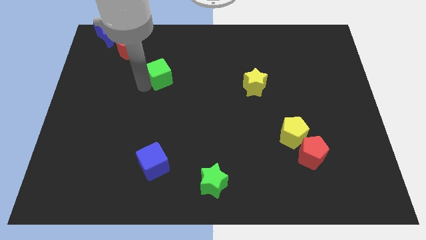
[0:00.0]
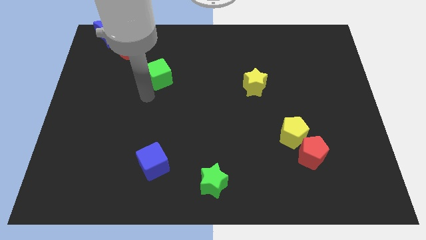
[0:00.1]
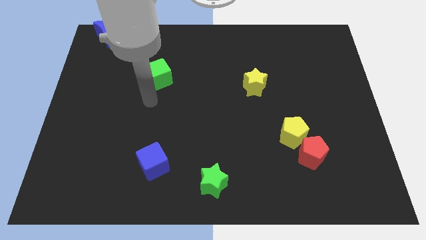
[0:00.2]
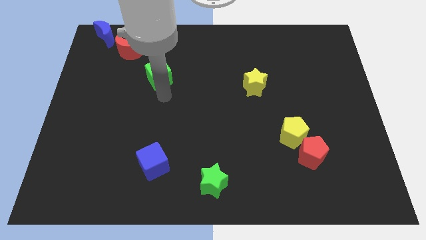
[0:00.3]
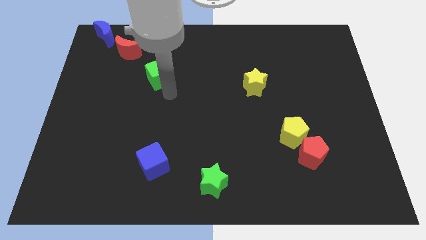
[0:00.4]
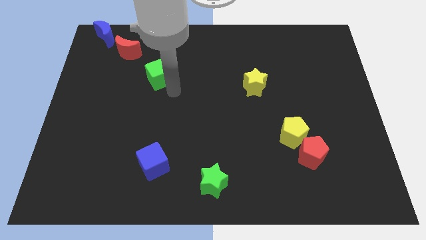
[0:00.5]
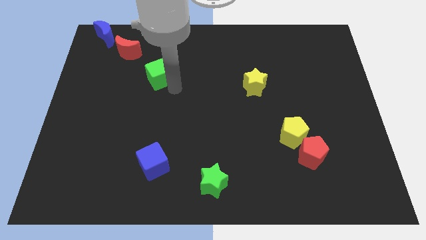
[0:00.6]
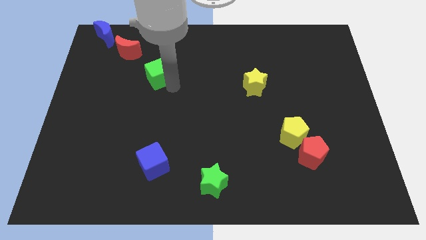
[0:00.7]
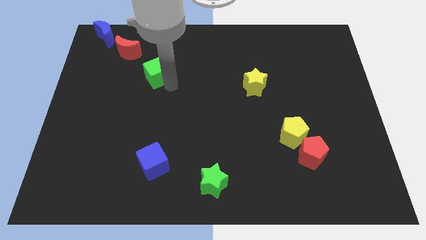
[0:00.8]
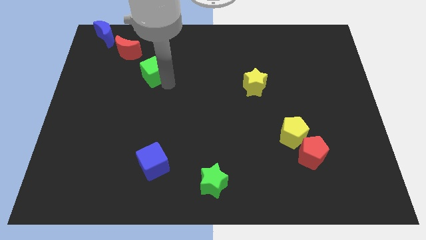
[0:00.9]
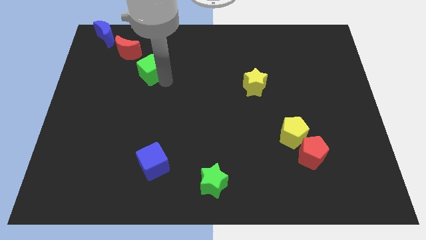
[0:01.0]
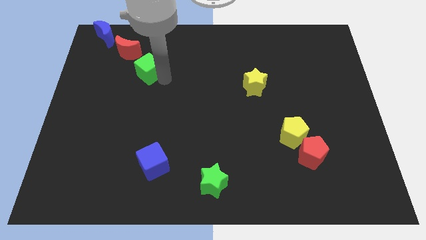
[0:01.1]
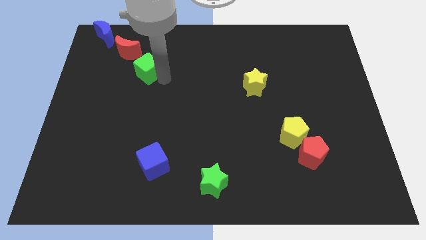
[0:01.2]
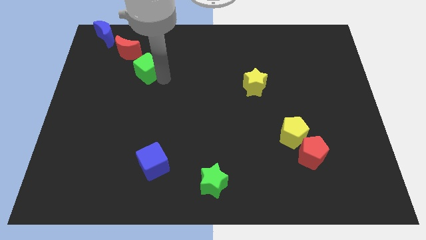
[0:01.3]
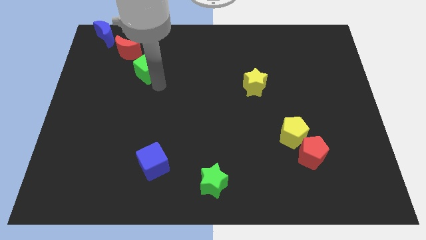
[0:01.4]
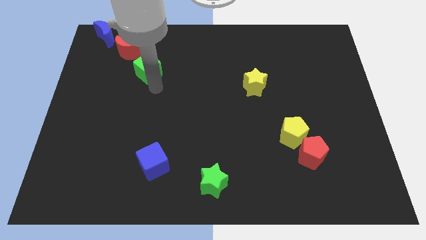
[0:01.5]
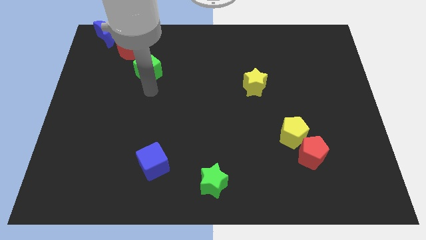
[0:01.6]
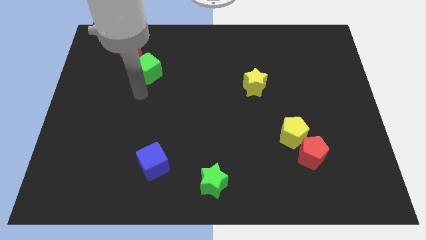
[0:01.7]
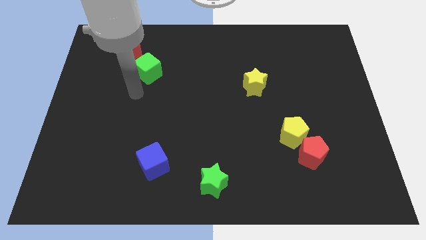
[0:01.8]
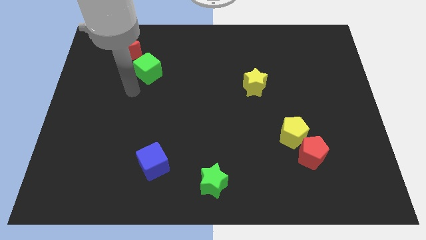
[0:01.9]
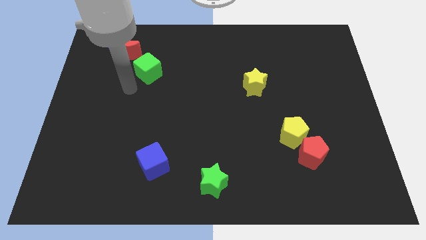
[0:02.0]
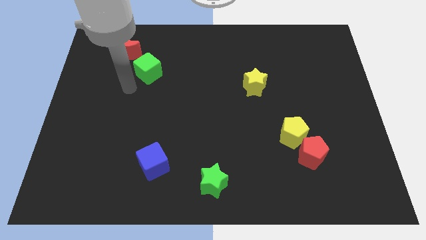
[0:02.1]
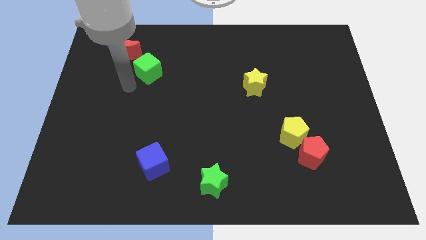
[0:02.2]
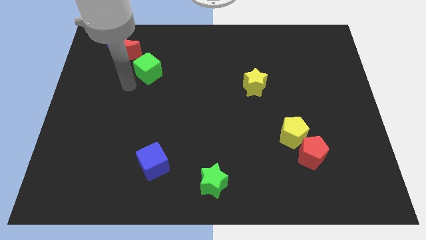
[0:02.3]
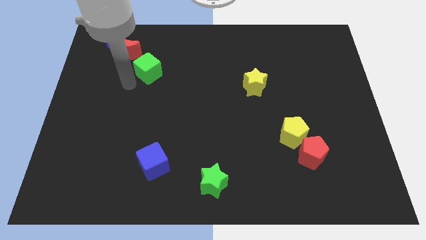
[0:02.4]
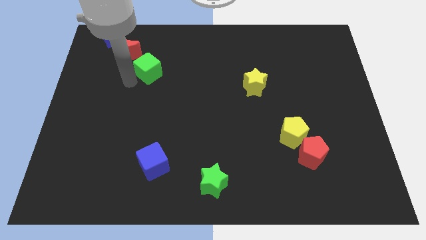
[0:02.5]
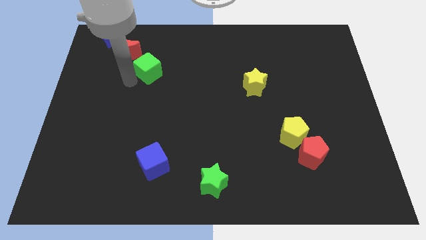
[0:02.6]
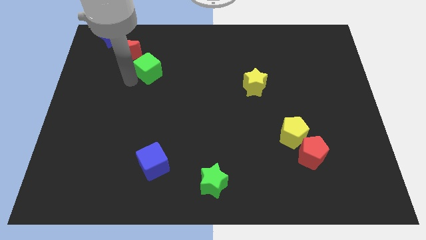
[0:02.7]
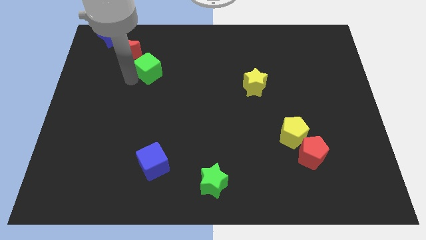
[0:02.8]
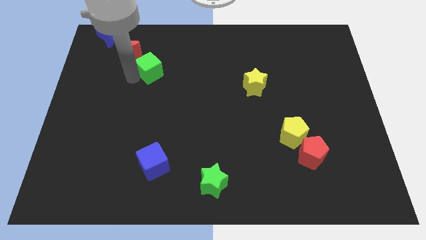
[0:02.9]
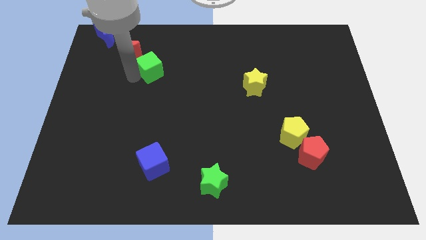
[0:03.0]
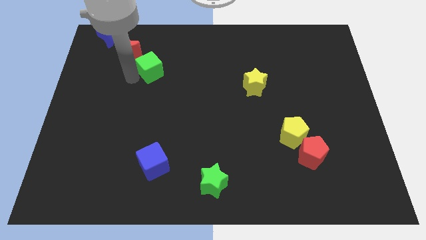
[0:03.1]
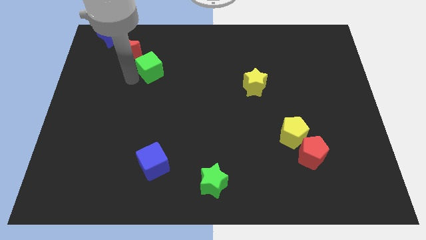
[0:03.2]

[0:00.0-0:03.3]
place green cube at bottom right to red moon

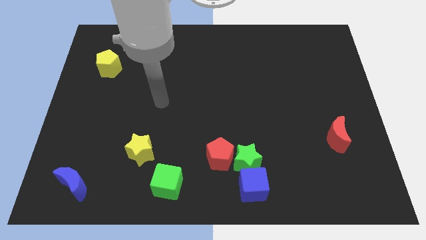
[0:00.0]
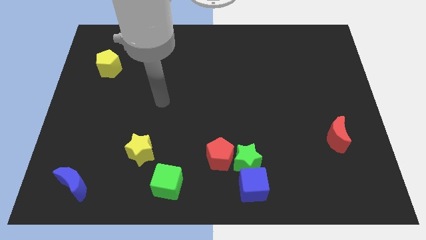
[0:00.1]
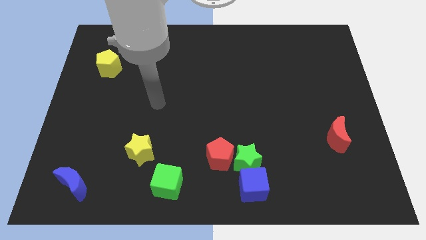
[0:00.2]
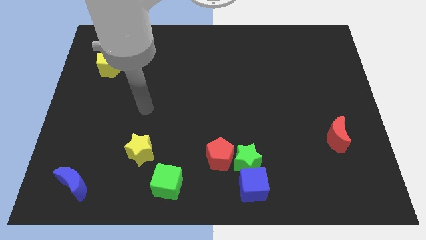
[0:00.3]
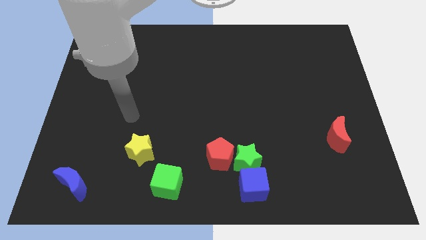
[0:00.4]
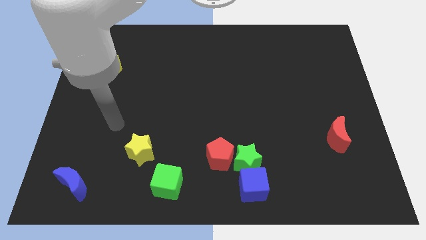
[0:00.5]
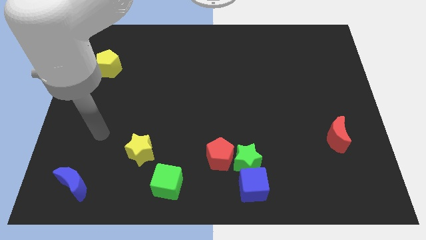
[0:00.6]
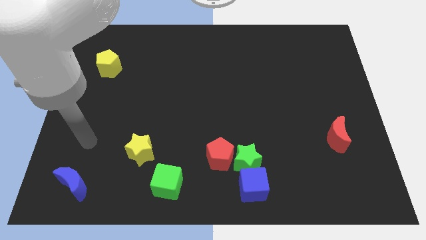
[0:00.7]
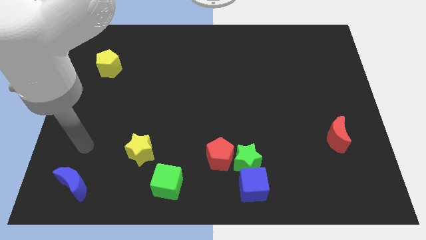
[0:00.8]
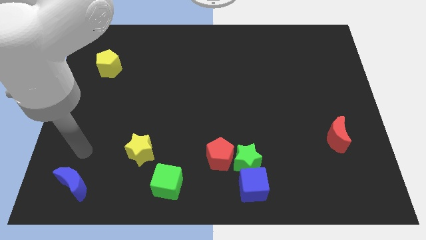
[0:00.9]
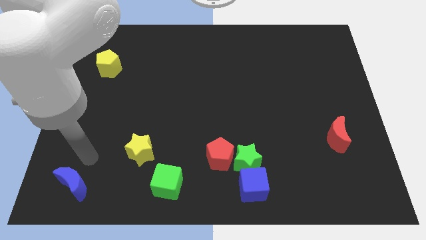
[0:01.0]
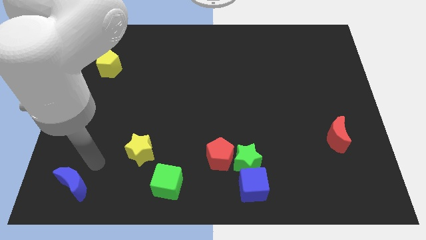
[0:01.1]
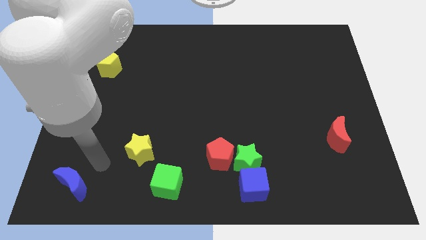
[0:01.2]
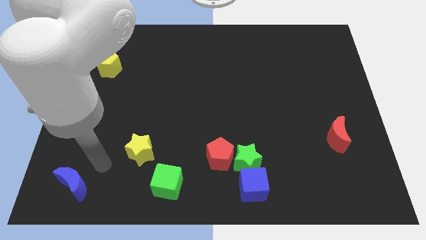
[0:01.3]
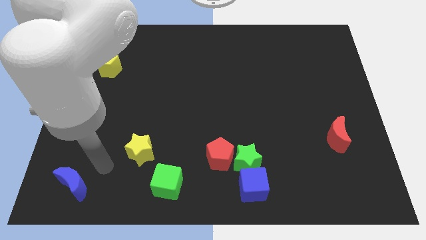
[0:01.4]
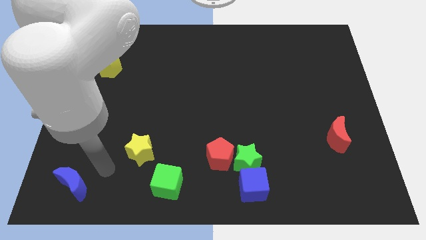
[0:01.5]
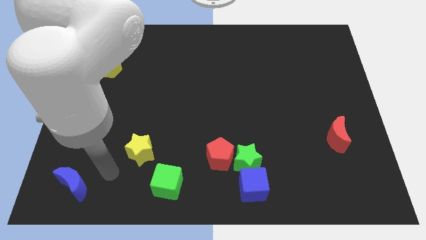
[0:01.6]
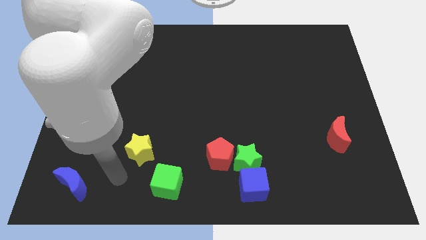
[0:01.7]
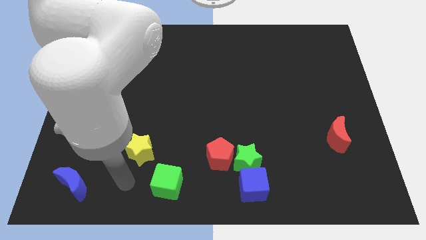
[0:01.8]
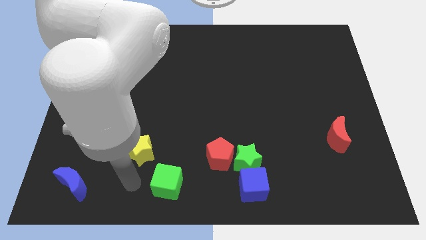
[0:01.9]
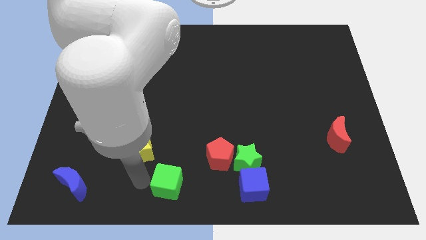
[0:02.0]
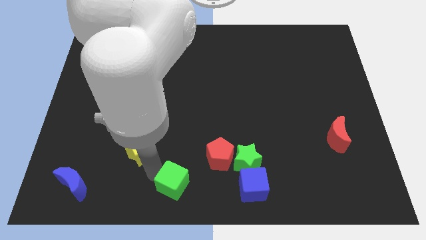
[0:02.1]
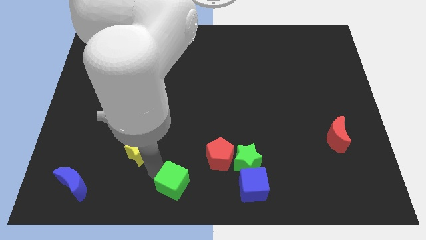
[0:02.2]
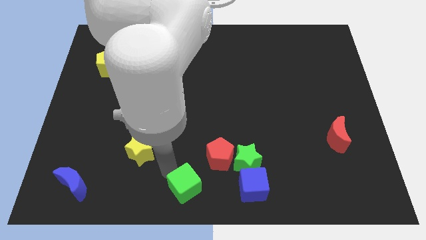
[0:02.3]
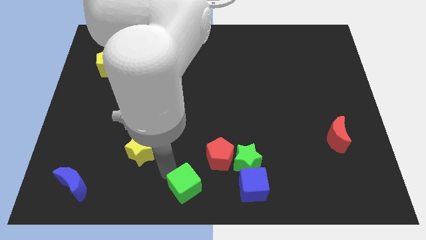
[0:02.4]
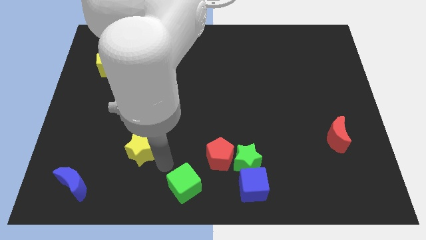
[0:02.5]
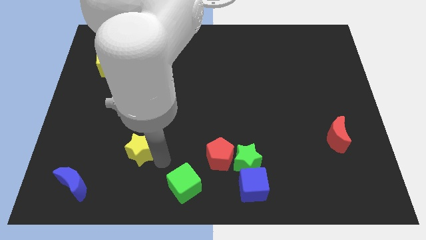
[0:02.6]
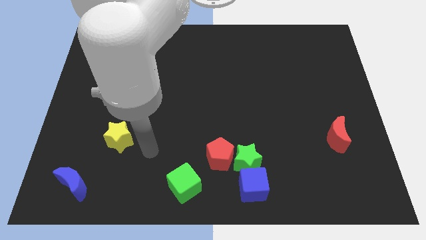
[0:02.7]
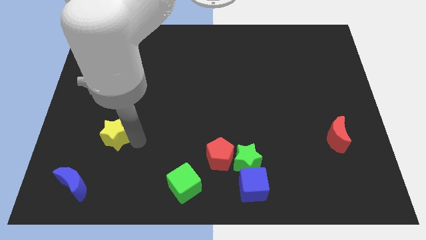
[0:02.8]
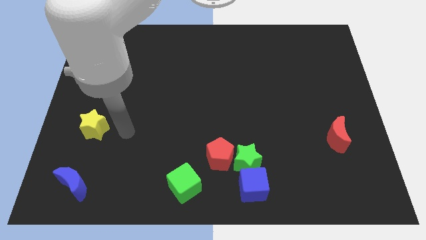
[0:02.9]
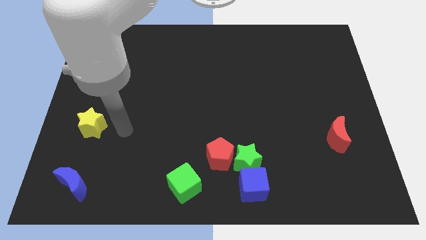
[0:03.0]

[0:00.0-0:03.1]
separate green cube and yellow star

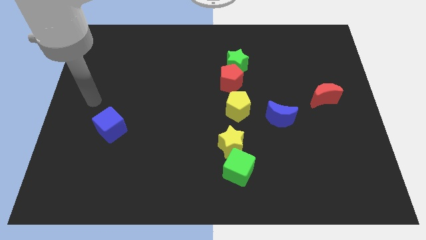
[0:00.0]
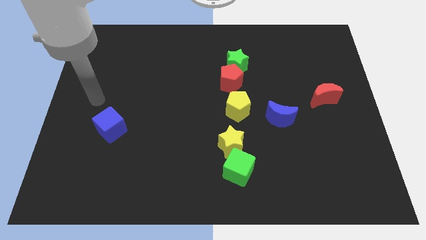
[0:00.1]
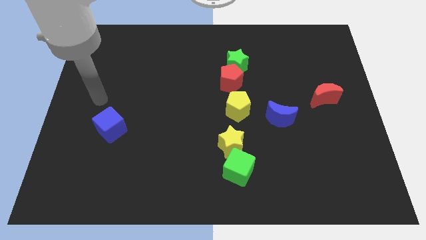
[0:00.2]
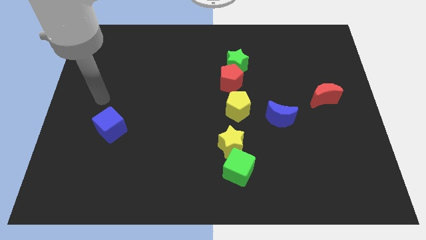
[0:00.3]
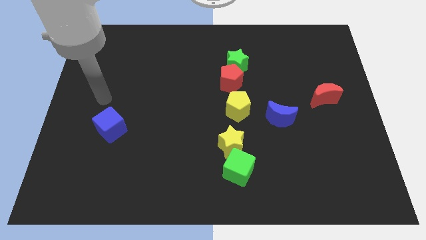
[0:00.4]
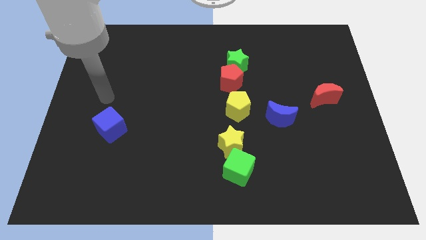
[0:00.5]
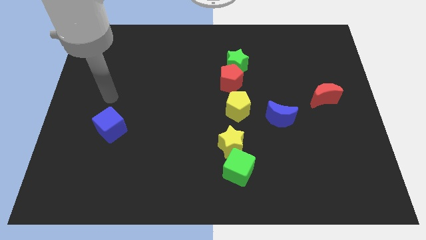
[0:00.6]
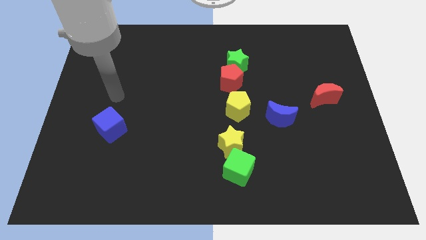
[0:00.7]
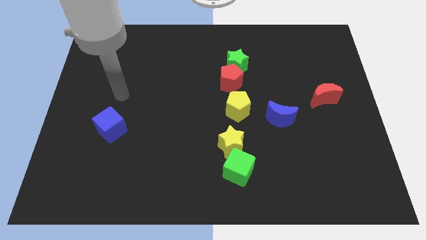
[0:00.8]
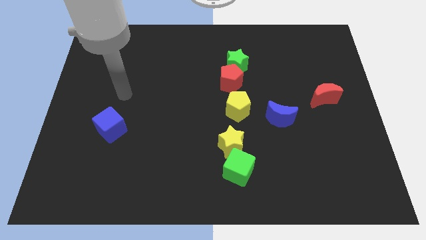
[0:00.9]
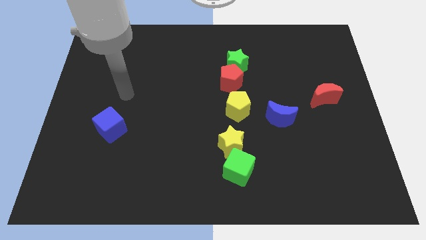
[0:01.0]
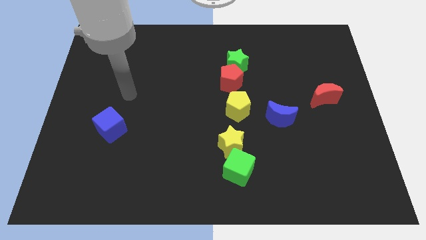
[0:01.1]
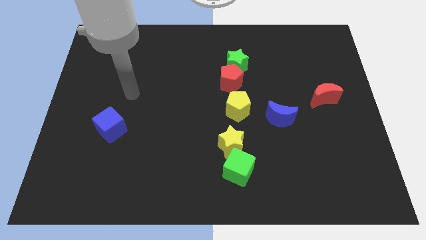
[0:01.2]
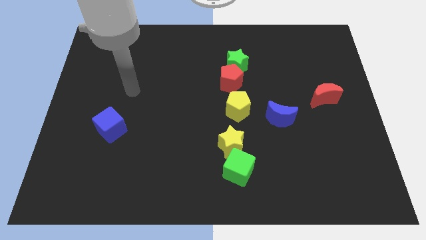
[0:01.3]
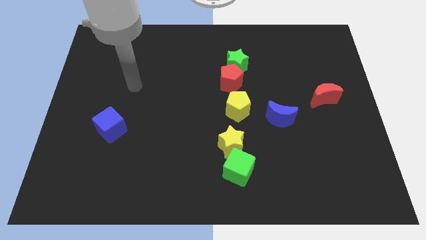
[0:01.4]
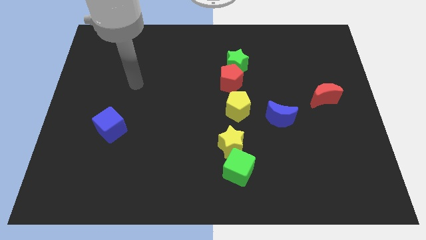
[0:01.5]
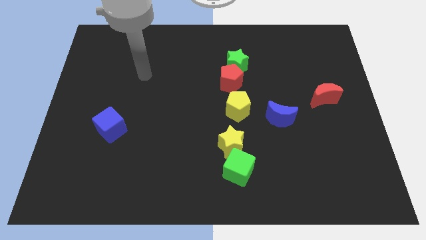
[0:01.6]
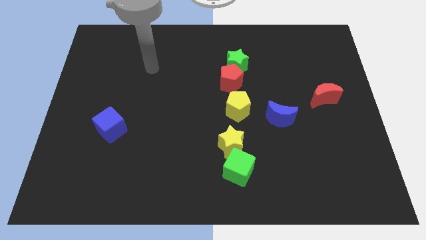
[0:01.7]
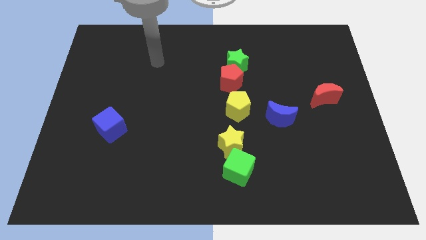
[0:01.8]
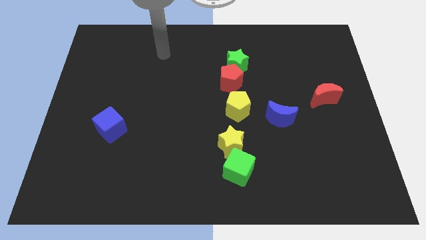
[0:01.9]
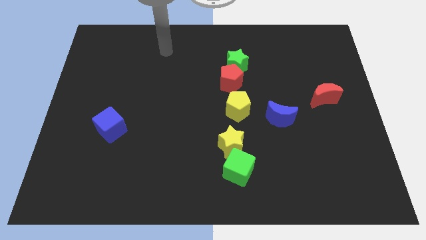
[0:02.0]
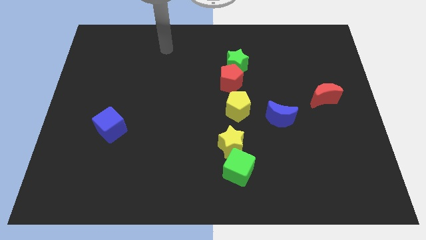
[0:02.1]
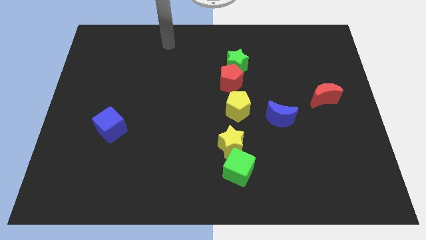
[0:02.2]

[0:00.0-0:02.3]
move your hand towards the top side

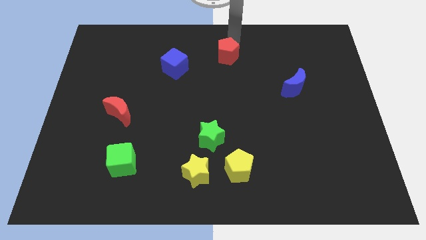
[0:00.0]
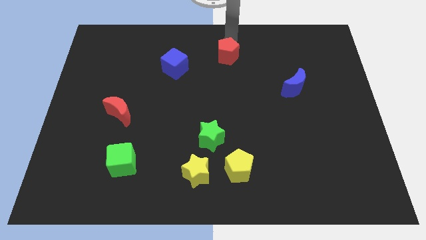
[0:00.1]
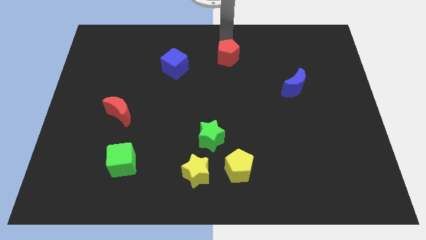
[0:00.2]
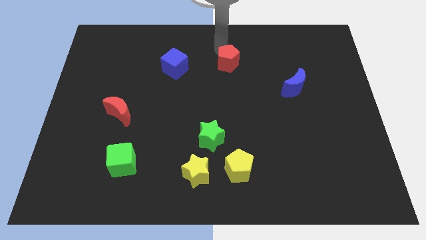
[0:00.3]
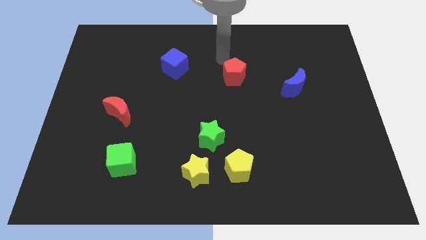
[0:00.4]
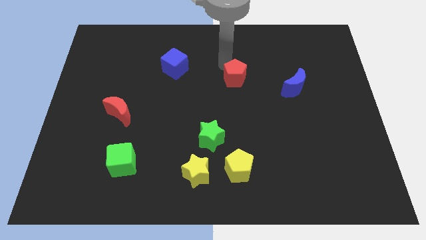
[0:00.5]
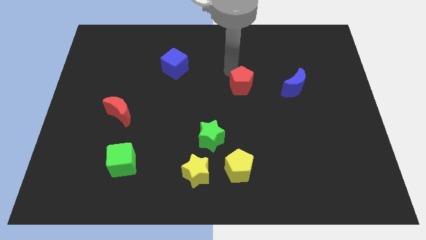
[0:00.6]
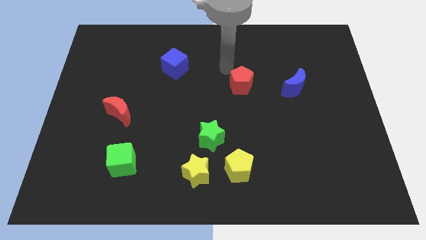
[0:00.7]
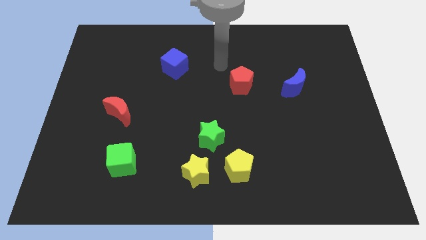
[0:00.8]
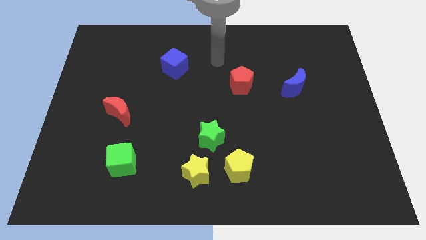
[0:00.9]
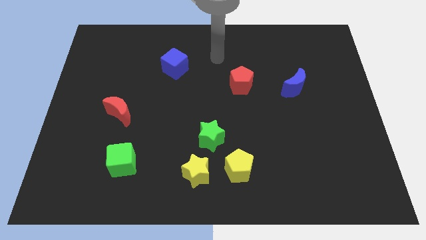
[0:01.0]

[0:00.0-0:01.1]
move the red pentagon parallel to the left of blue crescent
